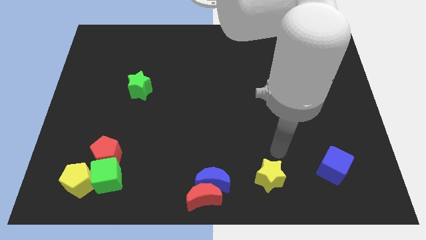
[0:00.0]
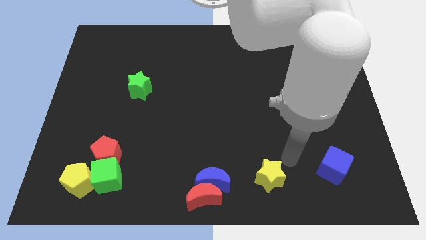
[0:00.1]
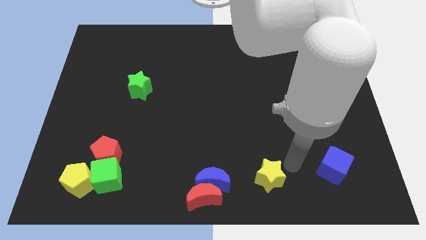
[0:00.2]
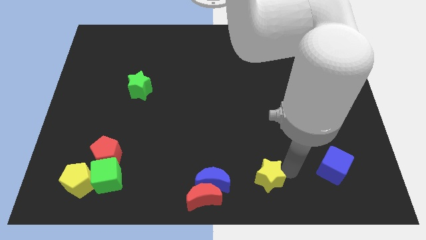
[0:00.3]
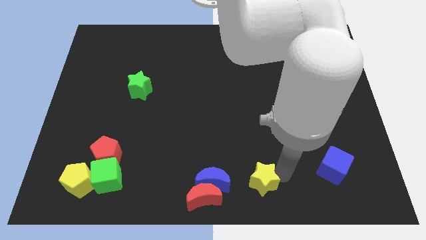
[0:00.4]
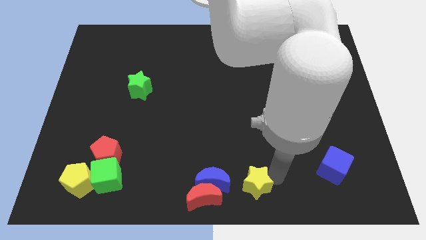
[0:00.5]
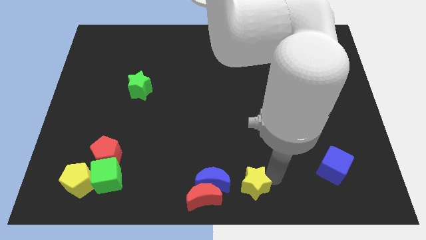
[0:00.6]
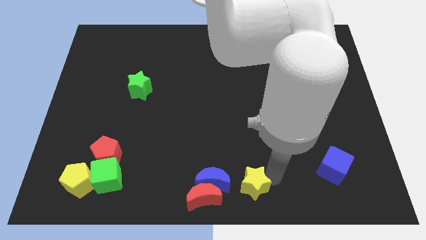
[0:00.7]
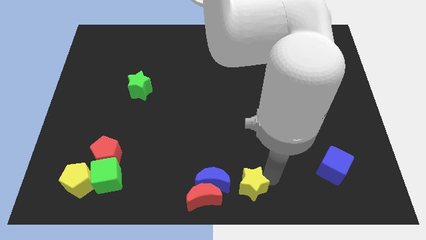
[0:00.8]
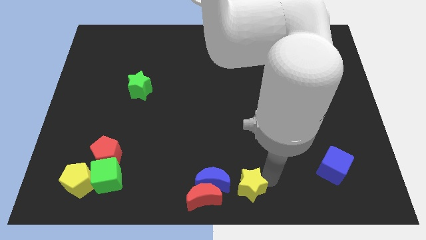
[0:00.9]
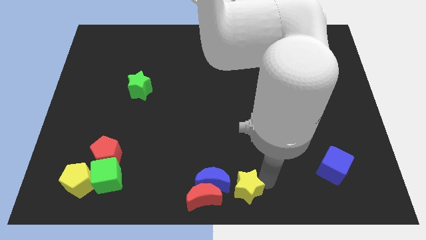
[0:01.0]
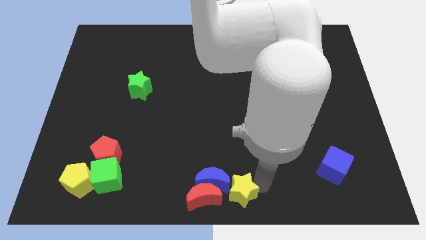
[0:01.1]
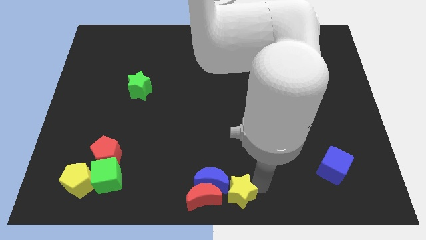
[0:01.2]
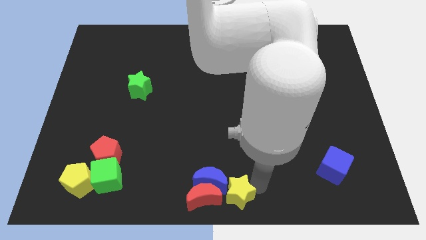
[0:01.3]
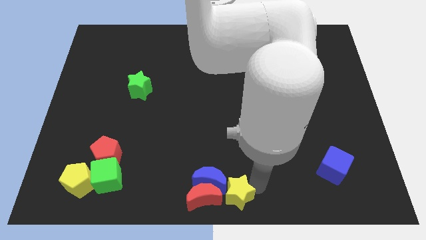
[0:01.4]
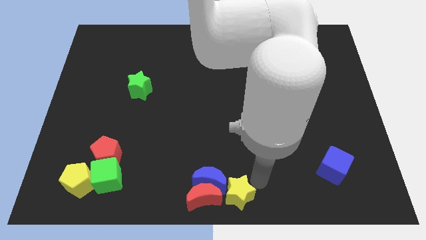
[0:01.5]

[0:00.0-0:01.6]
place the yellow star right to the red crescent and blue crescent

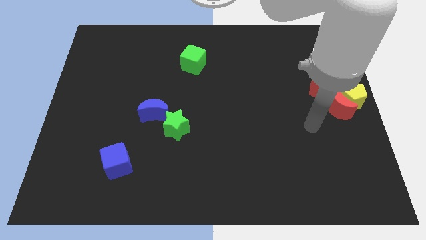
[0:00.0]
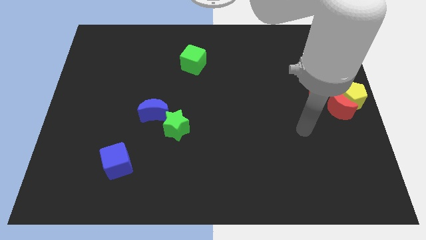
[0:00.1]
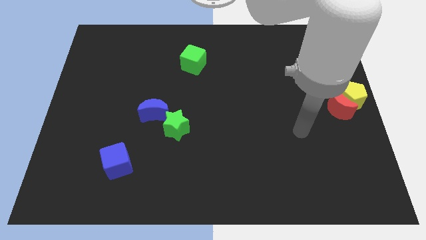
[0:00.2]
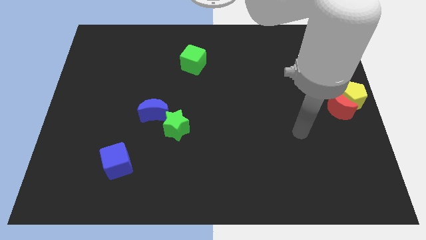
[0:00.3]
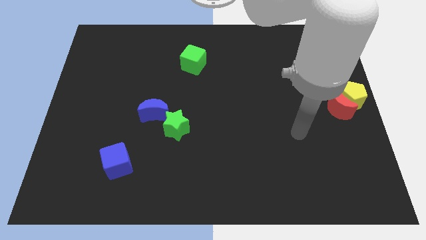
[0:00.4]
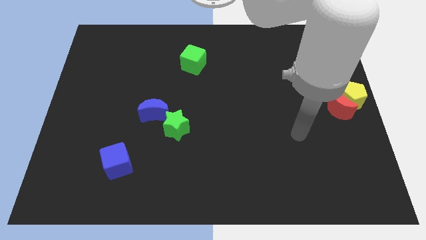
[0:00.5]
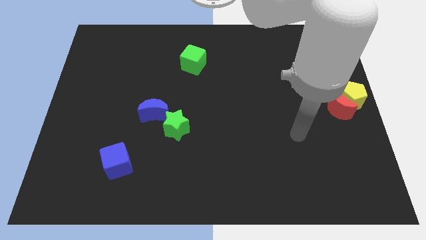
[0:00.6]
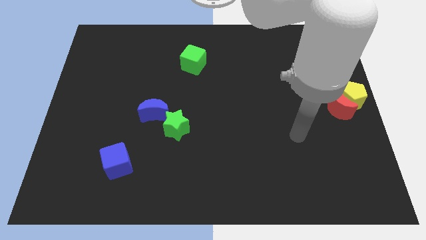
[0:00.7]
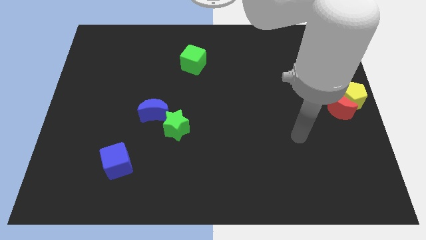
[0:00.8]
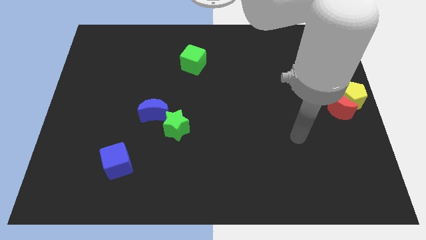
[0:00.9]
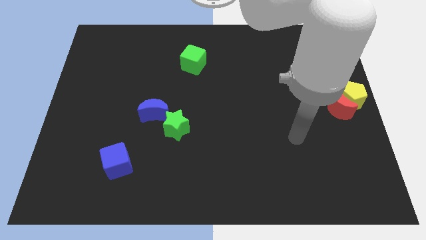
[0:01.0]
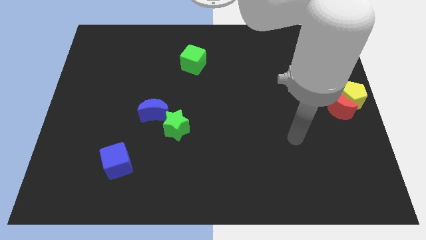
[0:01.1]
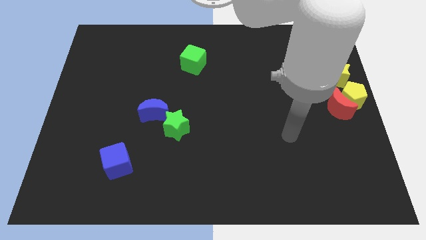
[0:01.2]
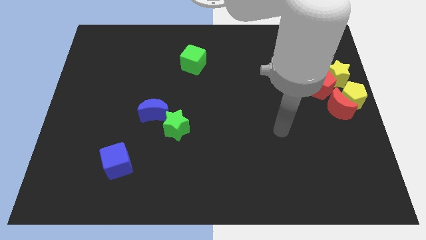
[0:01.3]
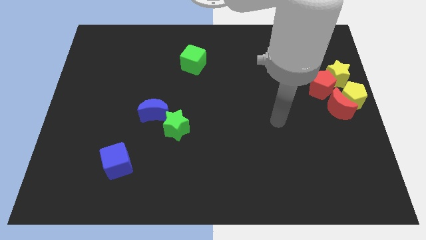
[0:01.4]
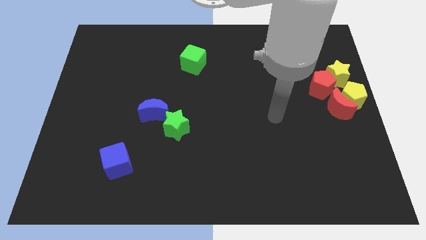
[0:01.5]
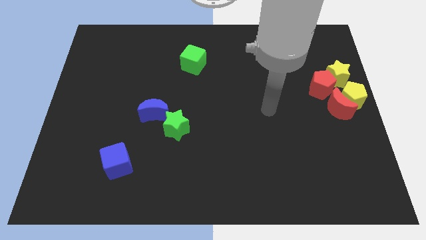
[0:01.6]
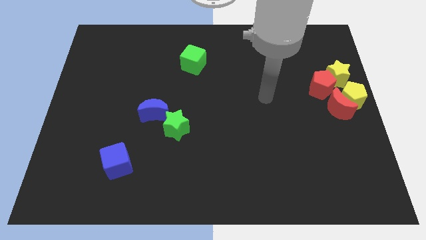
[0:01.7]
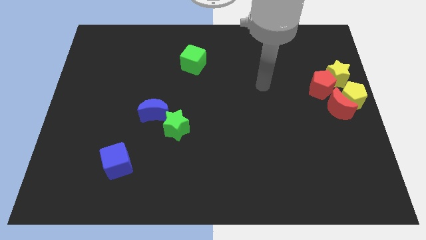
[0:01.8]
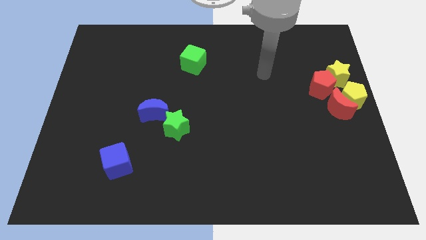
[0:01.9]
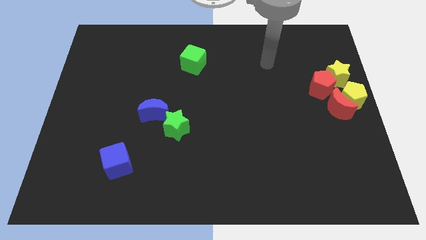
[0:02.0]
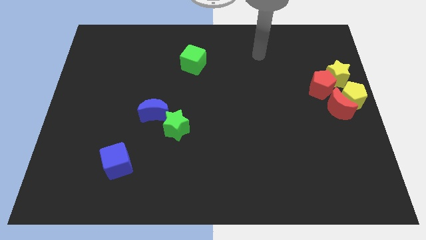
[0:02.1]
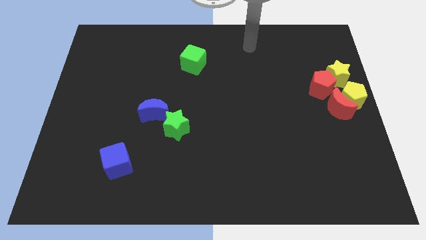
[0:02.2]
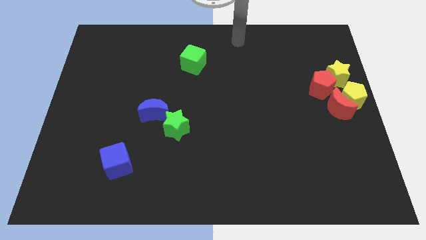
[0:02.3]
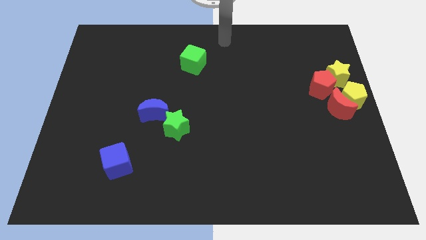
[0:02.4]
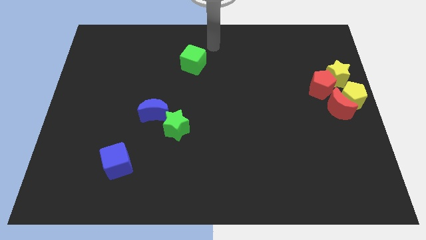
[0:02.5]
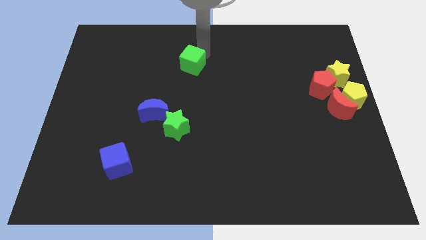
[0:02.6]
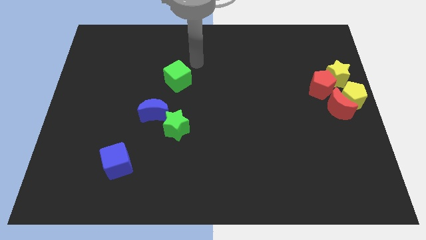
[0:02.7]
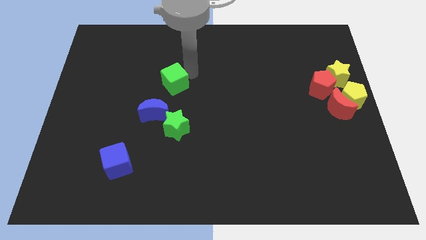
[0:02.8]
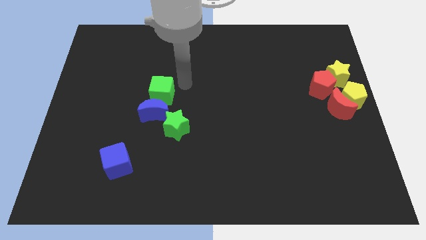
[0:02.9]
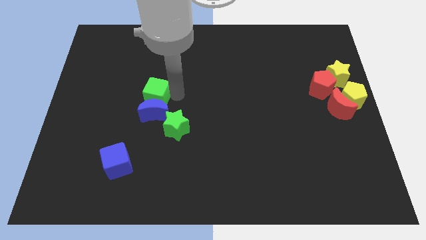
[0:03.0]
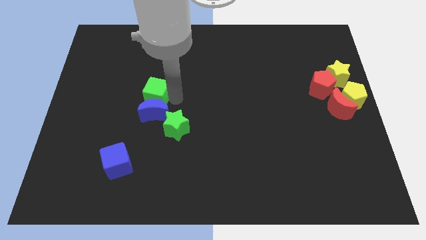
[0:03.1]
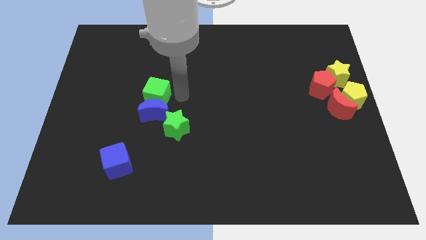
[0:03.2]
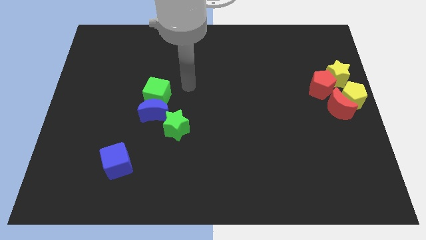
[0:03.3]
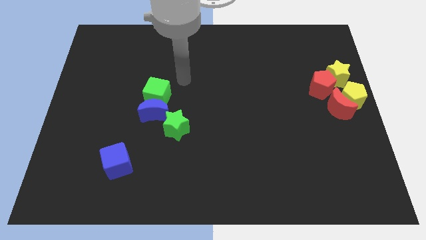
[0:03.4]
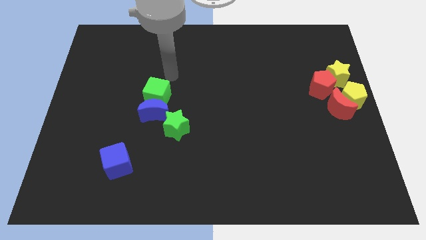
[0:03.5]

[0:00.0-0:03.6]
push the green cube towards the blue moon

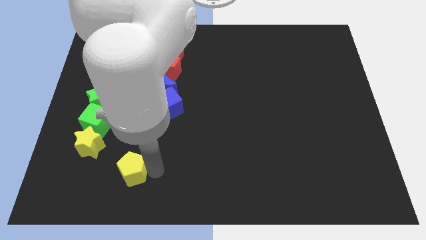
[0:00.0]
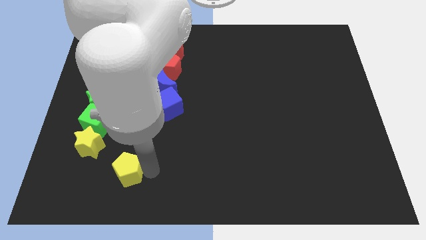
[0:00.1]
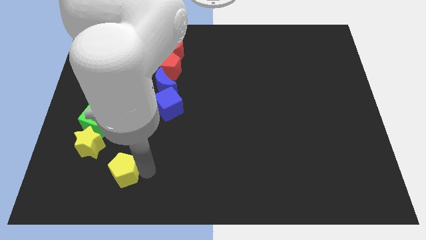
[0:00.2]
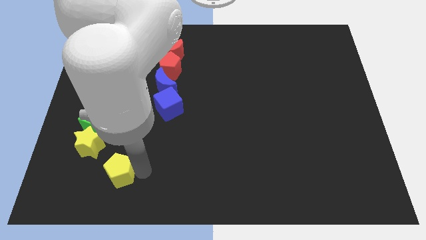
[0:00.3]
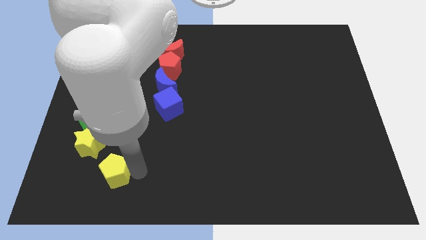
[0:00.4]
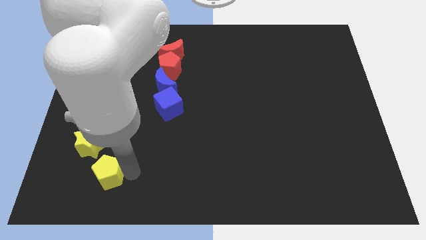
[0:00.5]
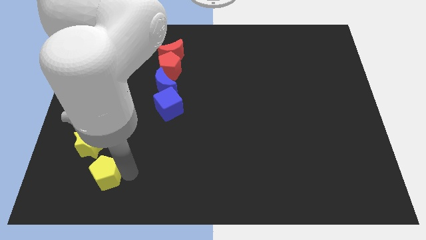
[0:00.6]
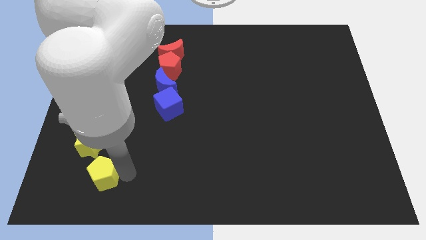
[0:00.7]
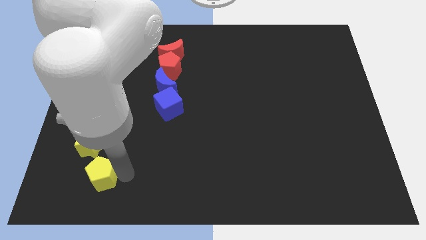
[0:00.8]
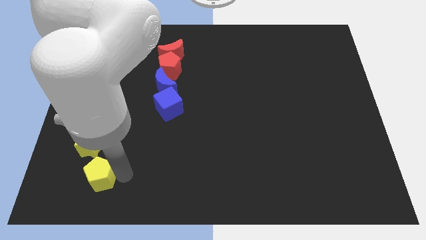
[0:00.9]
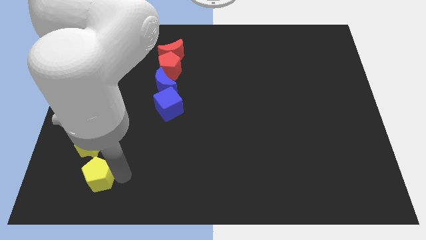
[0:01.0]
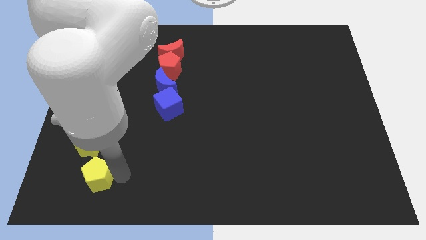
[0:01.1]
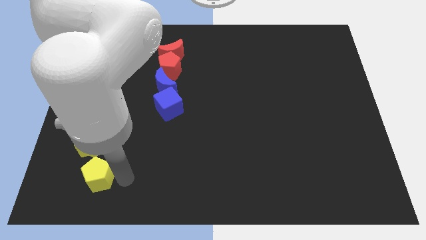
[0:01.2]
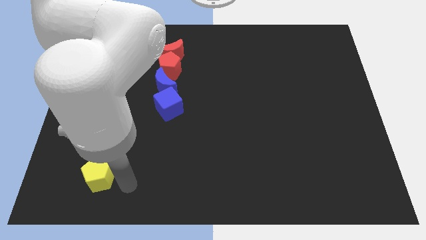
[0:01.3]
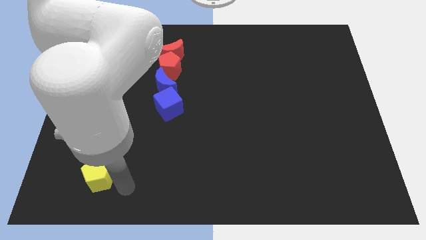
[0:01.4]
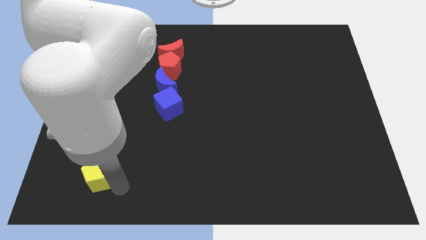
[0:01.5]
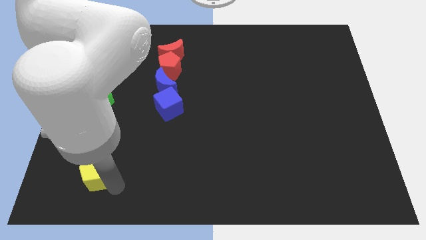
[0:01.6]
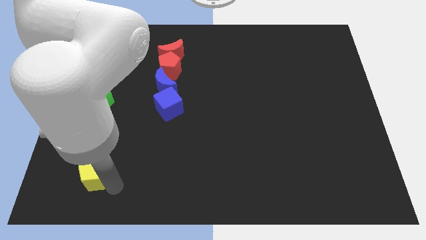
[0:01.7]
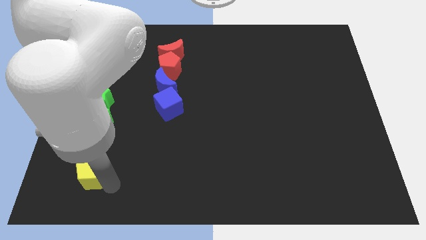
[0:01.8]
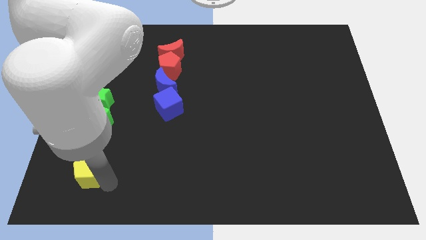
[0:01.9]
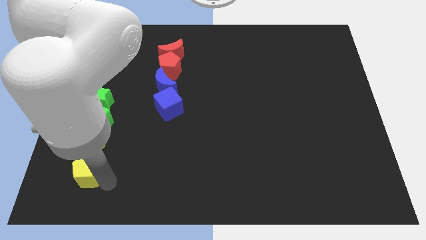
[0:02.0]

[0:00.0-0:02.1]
push the yellow pentagon below yellow star

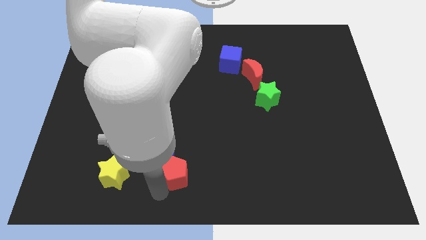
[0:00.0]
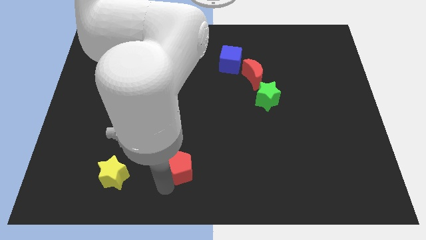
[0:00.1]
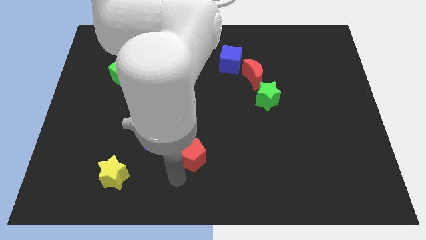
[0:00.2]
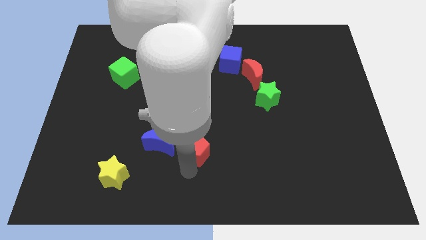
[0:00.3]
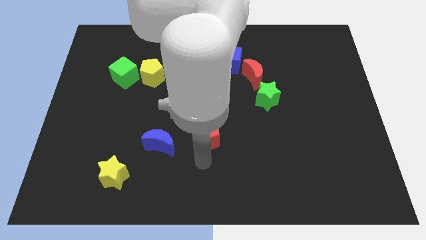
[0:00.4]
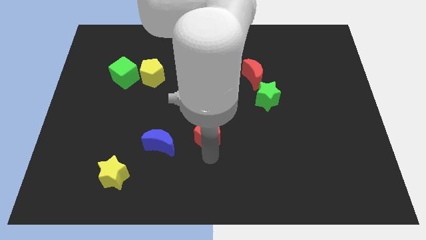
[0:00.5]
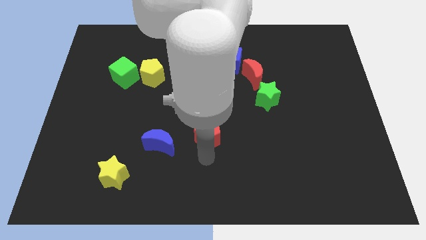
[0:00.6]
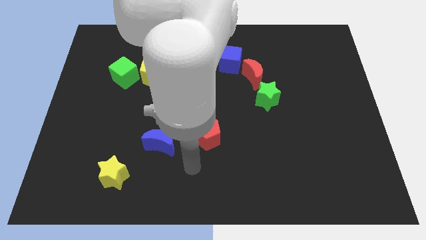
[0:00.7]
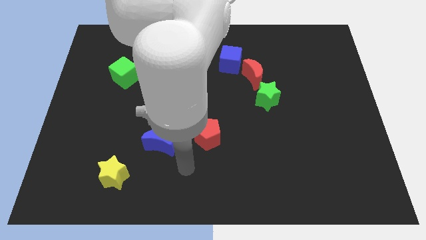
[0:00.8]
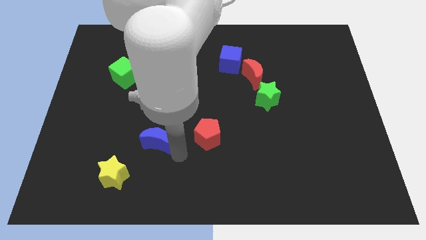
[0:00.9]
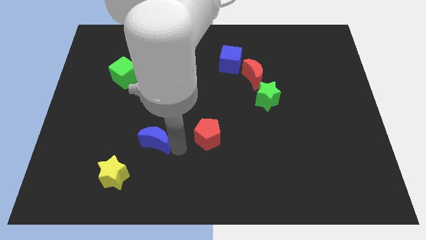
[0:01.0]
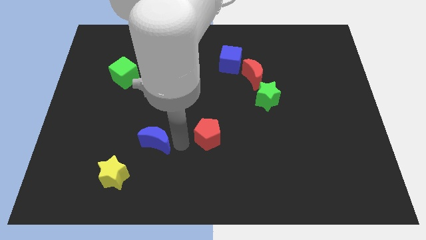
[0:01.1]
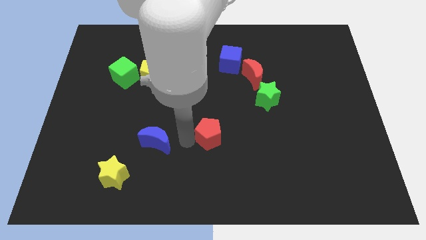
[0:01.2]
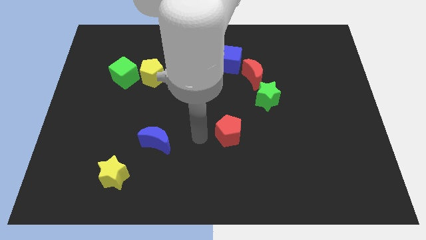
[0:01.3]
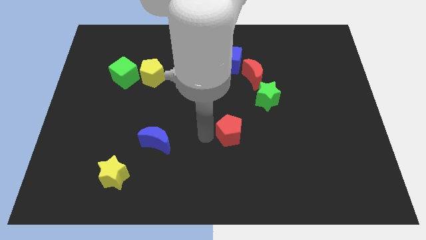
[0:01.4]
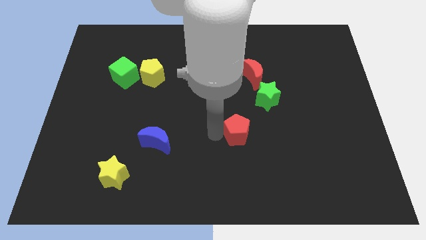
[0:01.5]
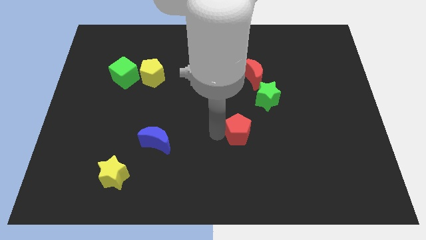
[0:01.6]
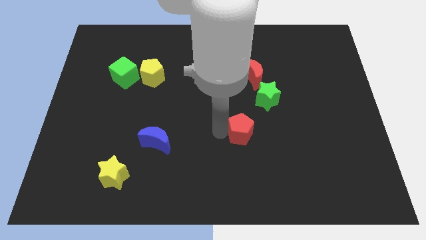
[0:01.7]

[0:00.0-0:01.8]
move red pentagon towards the bottom left of the green star
